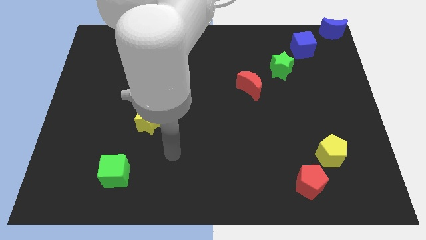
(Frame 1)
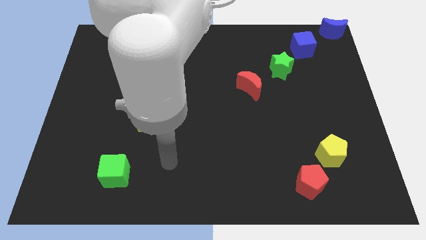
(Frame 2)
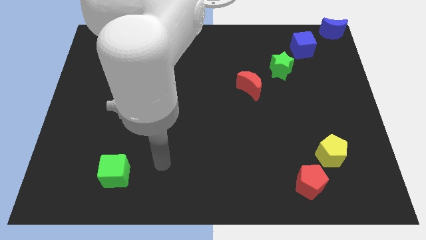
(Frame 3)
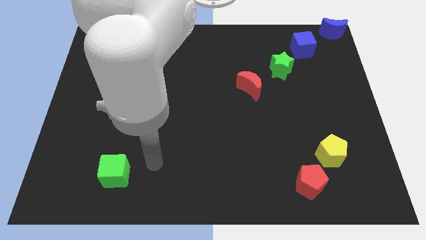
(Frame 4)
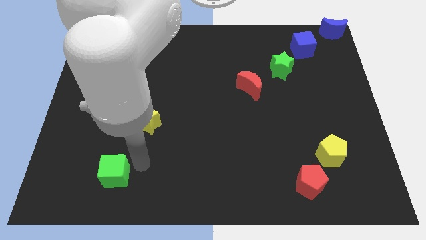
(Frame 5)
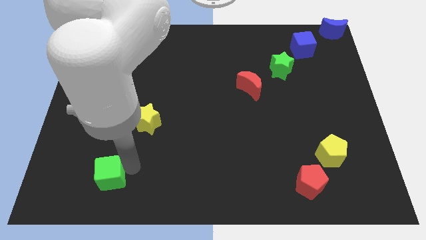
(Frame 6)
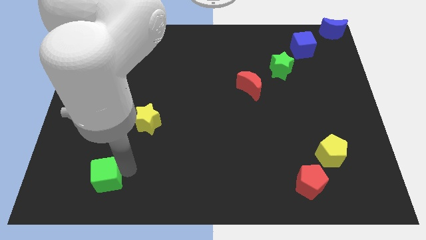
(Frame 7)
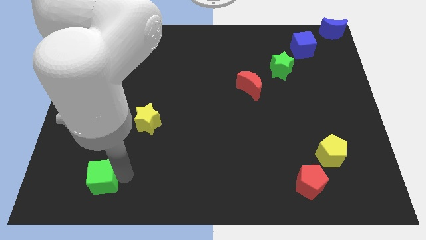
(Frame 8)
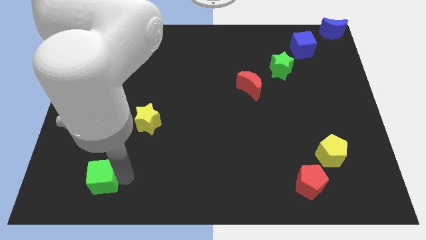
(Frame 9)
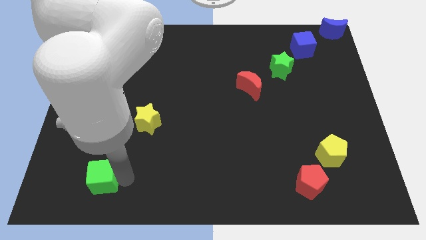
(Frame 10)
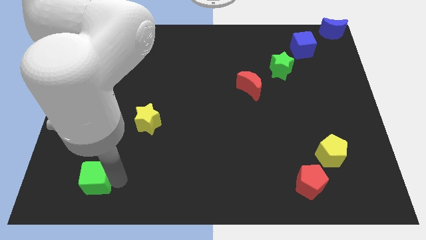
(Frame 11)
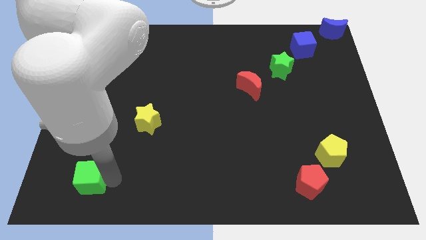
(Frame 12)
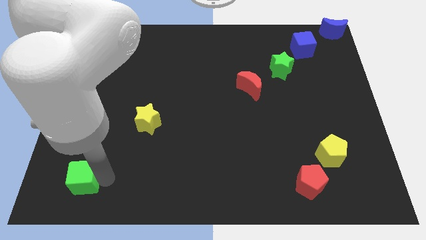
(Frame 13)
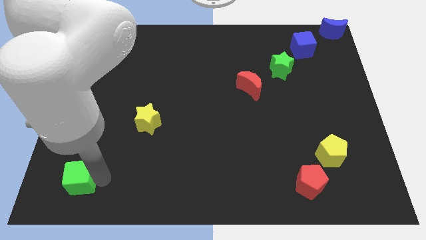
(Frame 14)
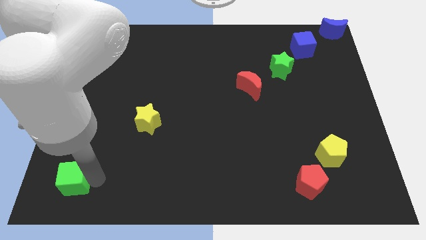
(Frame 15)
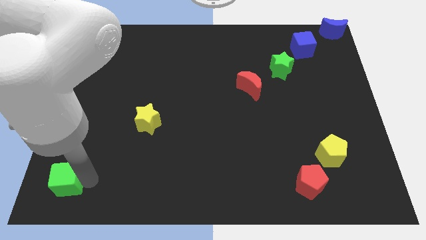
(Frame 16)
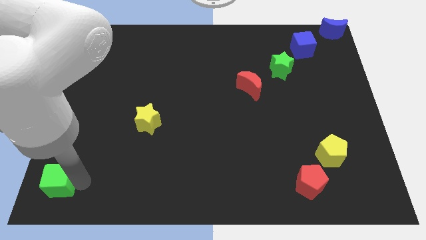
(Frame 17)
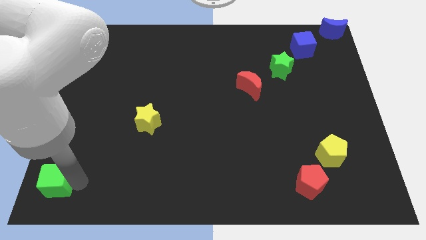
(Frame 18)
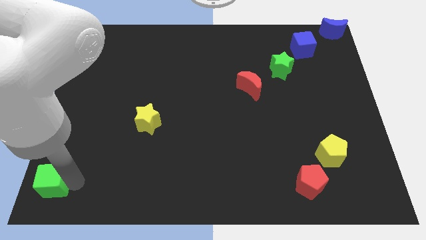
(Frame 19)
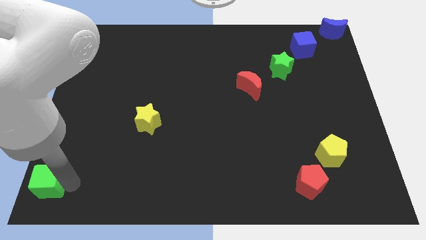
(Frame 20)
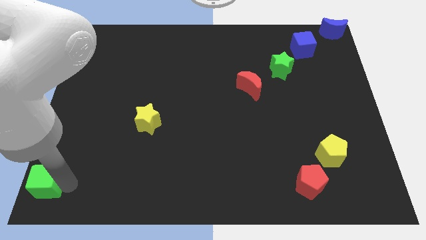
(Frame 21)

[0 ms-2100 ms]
drag the green cube to the bottom left side

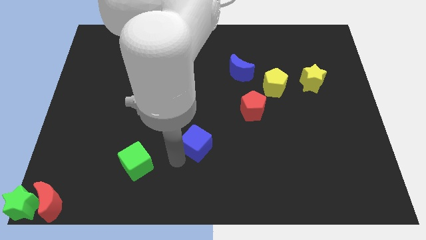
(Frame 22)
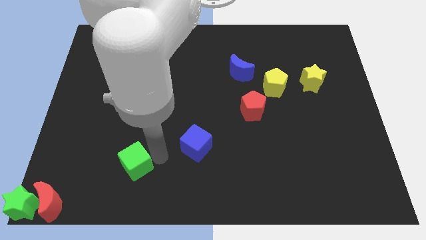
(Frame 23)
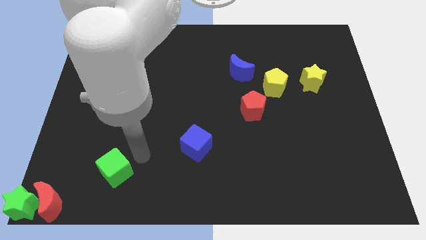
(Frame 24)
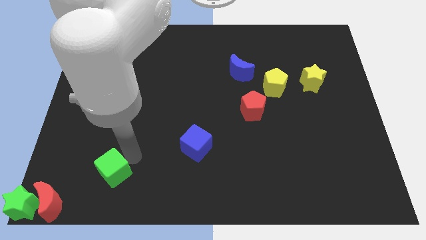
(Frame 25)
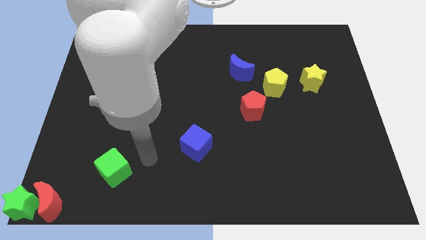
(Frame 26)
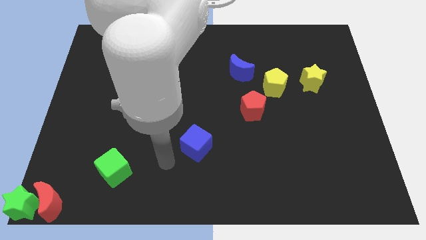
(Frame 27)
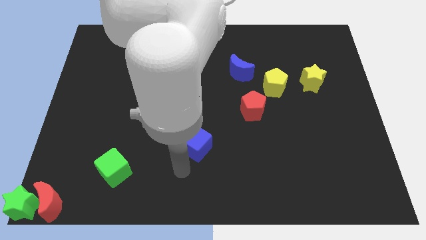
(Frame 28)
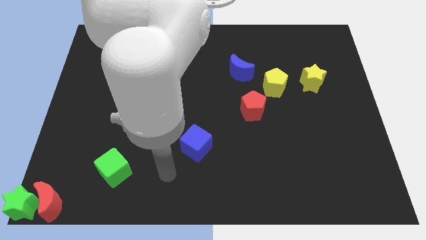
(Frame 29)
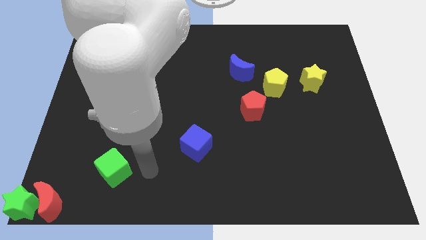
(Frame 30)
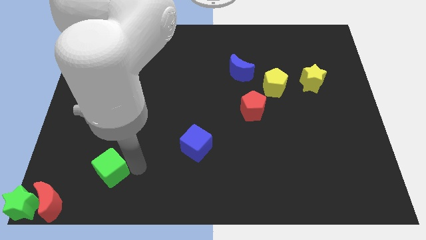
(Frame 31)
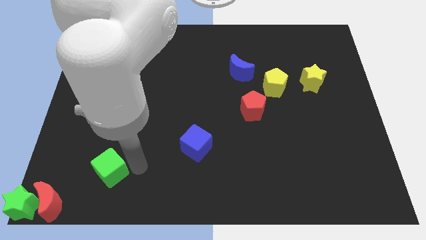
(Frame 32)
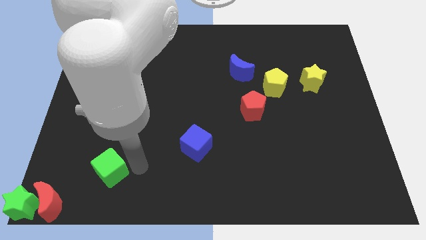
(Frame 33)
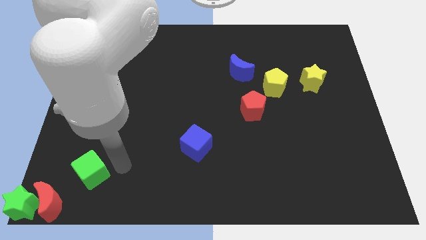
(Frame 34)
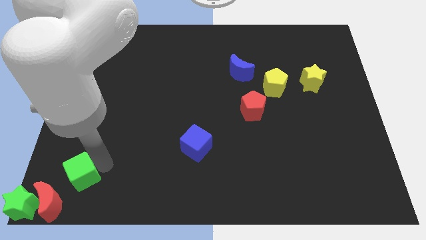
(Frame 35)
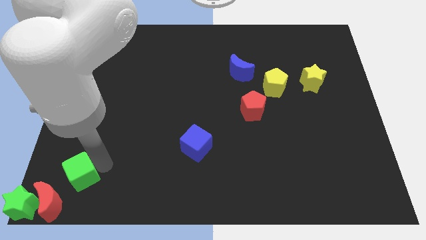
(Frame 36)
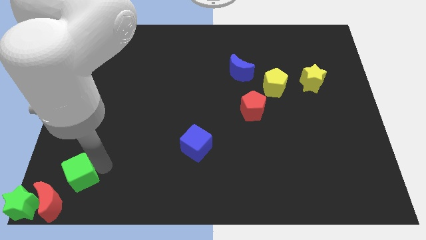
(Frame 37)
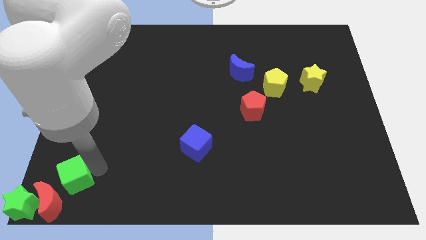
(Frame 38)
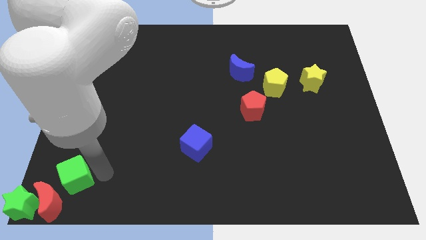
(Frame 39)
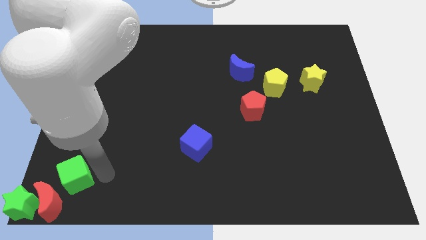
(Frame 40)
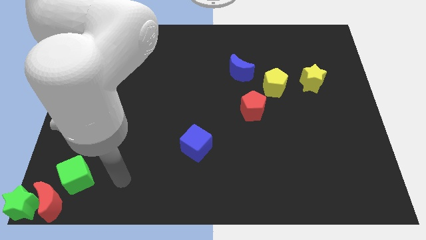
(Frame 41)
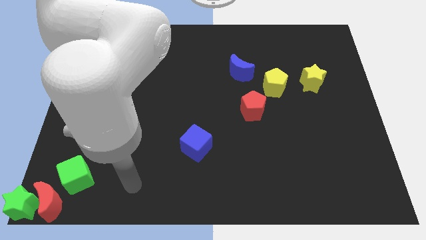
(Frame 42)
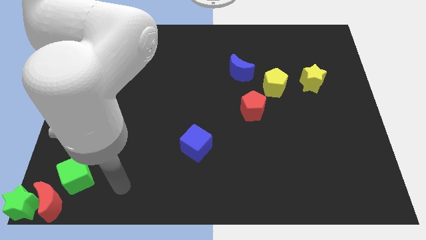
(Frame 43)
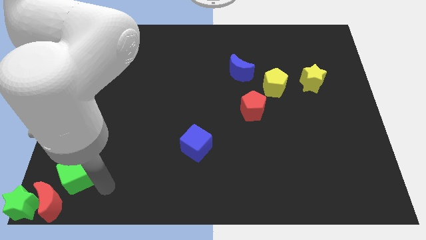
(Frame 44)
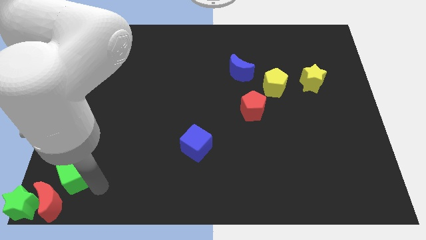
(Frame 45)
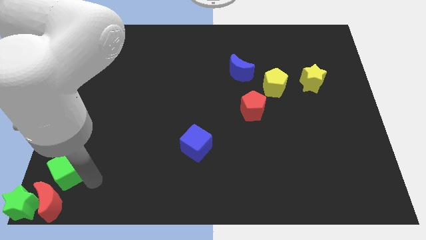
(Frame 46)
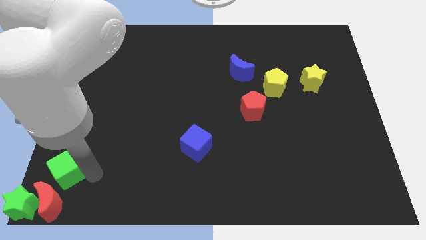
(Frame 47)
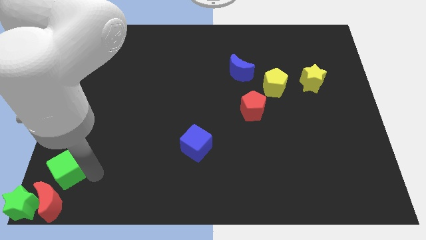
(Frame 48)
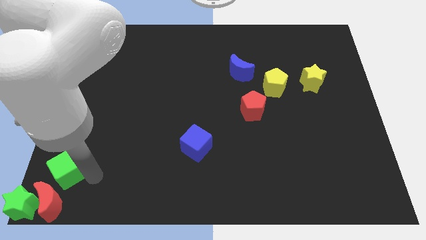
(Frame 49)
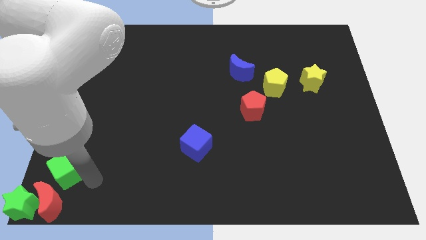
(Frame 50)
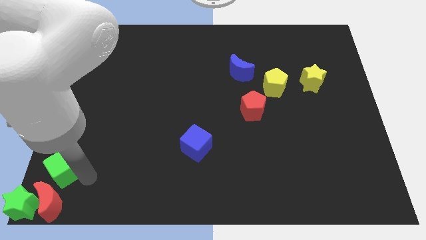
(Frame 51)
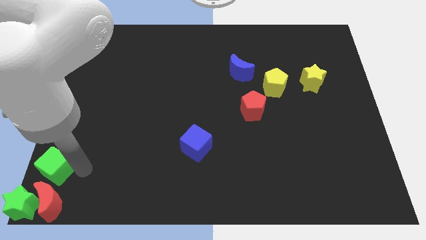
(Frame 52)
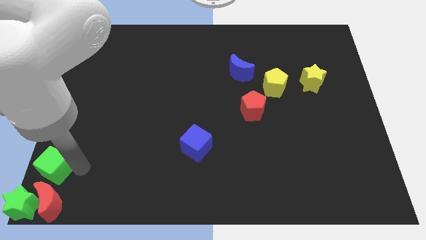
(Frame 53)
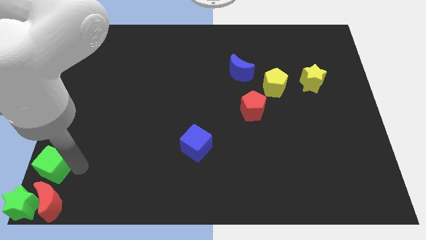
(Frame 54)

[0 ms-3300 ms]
move the green cube to the top of the red crescent

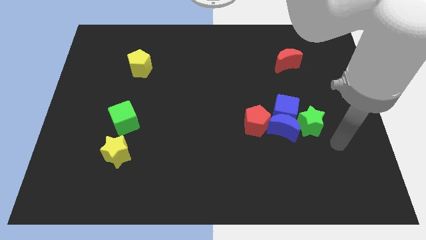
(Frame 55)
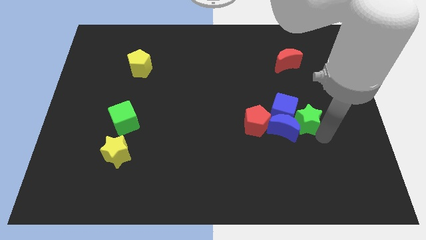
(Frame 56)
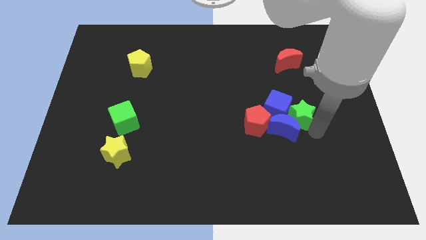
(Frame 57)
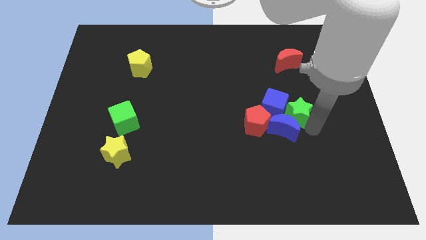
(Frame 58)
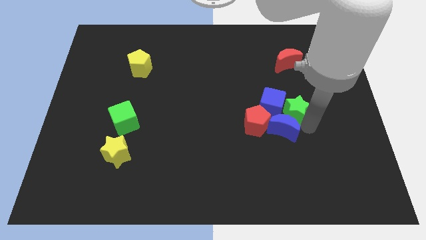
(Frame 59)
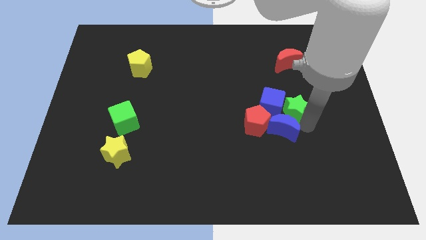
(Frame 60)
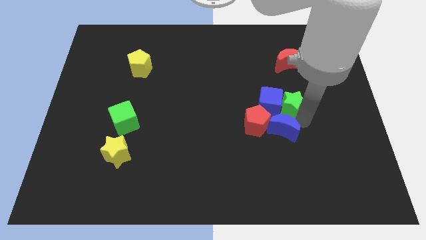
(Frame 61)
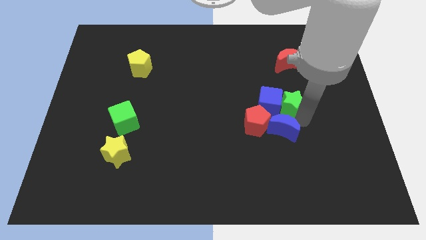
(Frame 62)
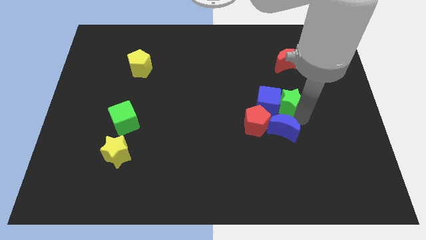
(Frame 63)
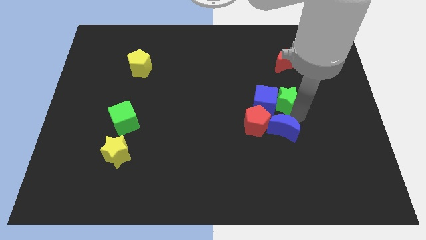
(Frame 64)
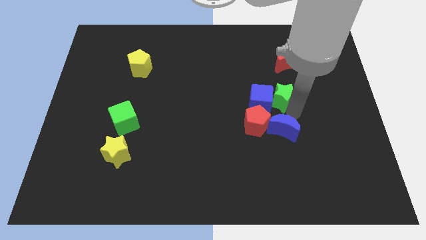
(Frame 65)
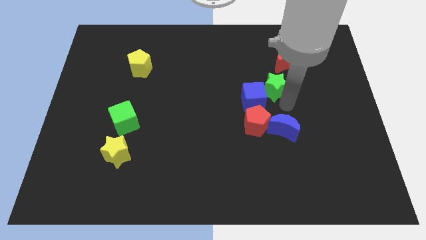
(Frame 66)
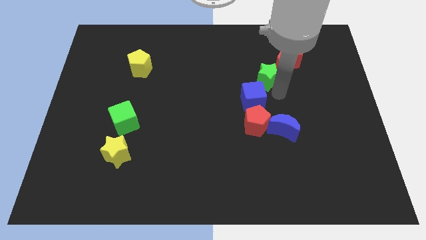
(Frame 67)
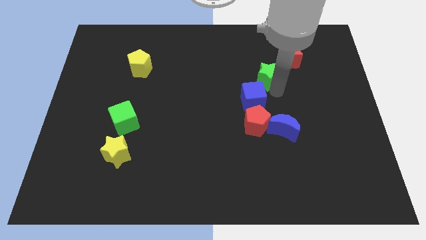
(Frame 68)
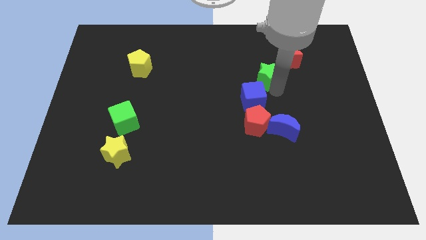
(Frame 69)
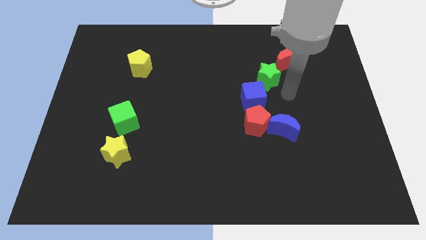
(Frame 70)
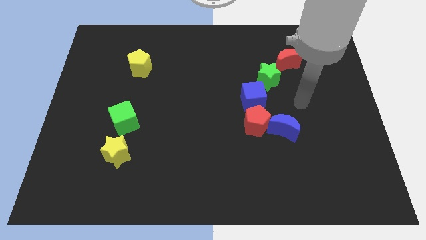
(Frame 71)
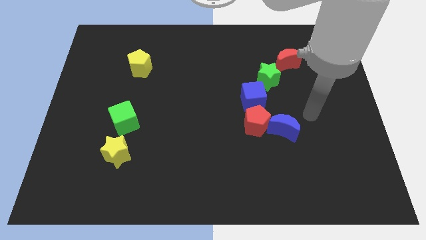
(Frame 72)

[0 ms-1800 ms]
place the green star in between red moon and blue cube

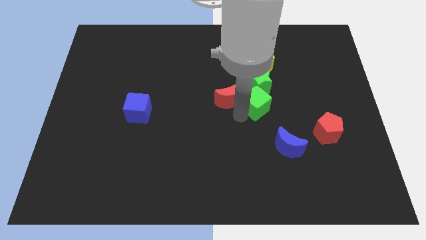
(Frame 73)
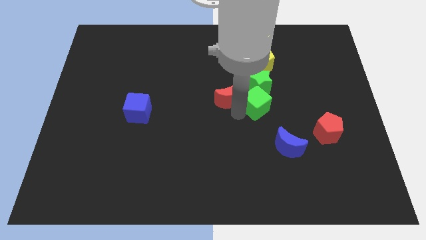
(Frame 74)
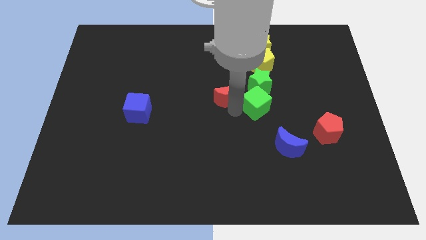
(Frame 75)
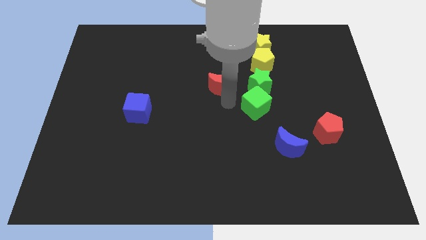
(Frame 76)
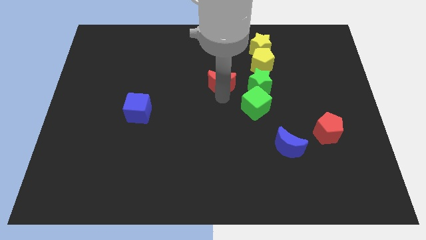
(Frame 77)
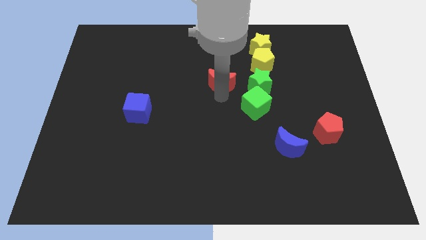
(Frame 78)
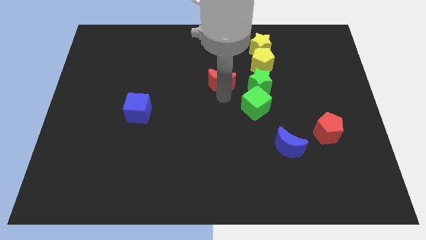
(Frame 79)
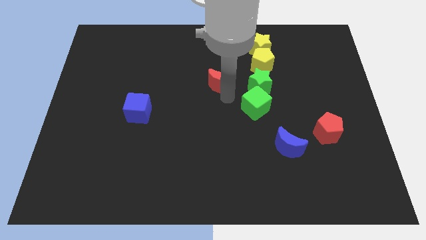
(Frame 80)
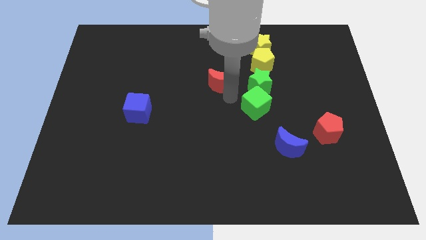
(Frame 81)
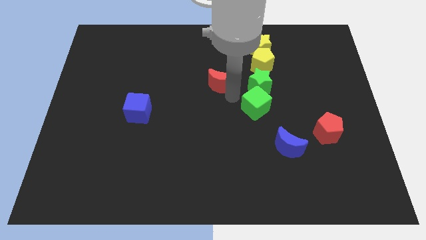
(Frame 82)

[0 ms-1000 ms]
place the red moon parallel to green star

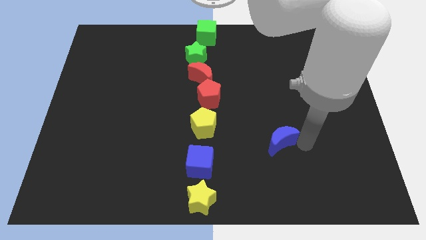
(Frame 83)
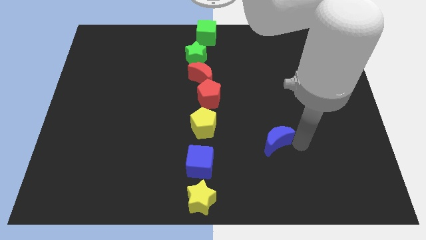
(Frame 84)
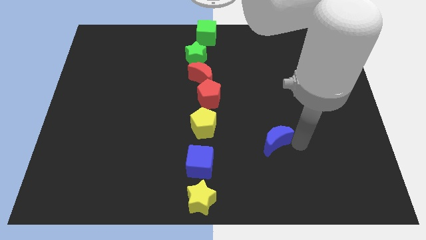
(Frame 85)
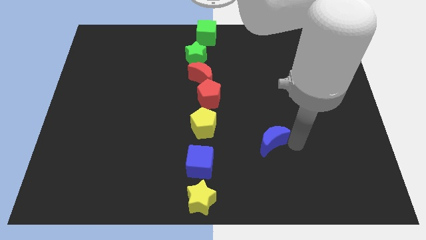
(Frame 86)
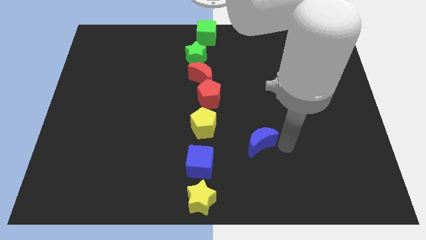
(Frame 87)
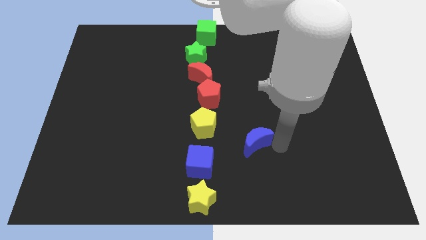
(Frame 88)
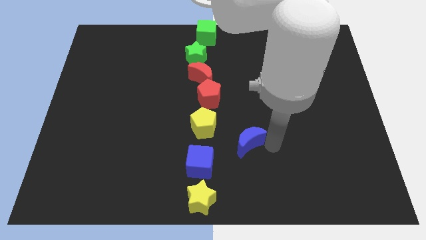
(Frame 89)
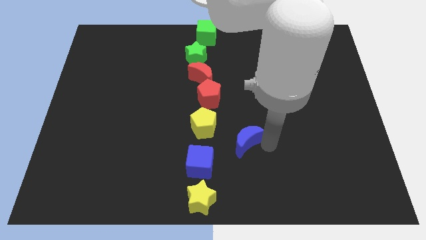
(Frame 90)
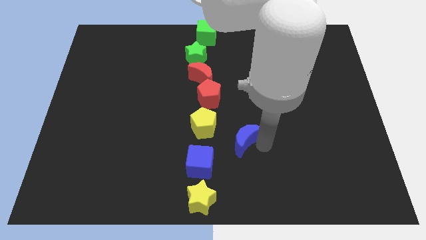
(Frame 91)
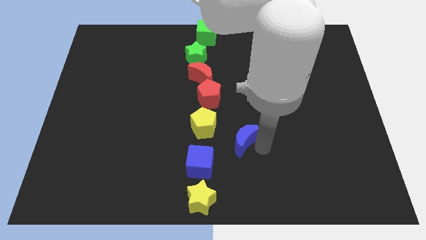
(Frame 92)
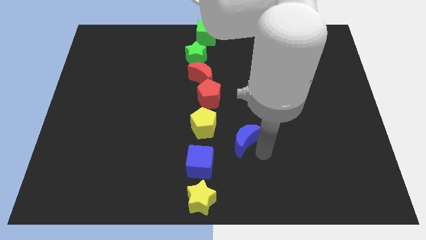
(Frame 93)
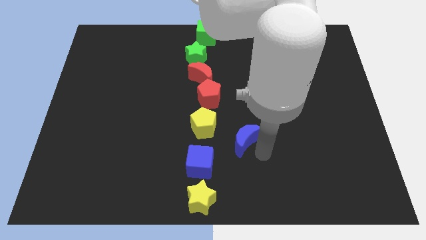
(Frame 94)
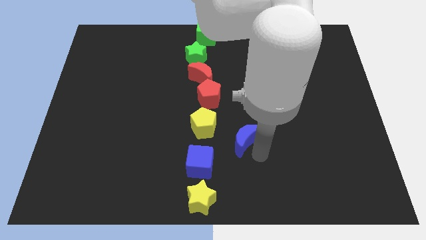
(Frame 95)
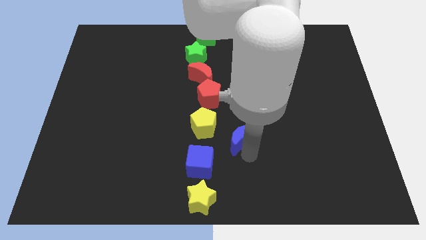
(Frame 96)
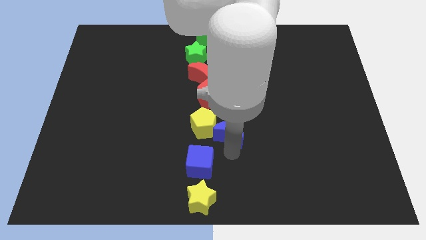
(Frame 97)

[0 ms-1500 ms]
push the blue crescent into the yellow pentagon
